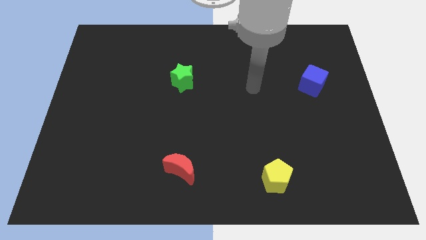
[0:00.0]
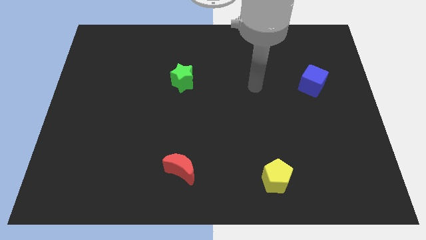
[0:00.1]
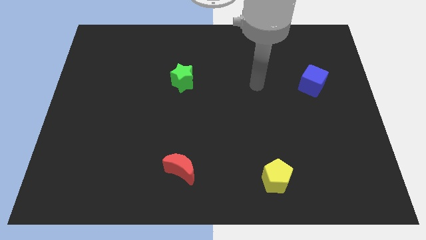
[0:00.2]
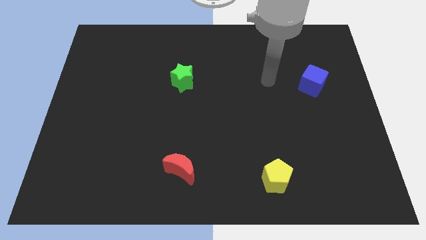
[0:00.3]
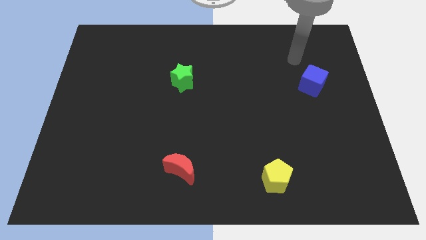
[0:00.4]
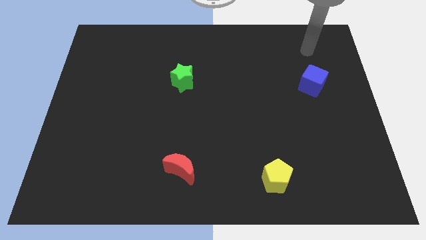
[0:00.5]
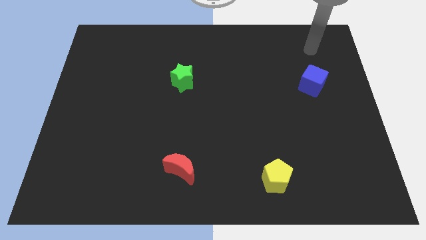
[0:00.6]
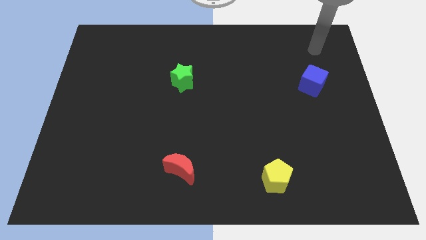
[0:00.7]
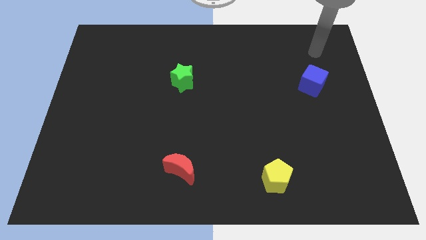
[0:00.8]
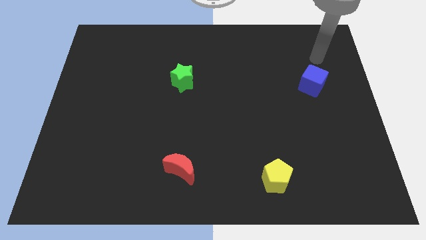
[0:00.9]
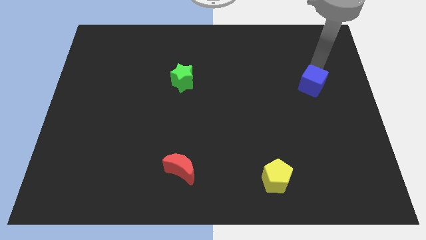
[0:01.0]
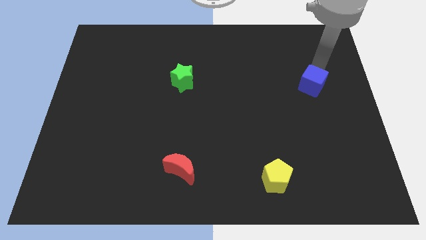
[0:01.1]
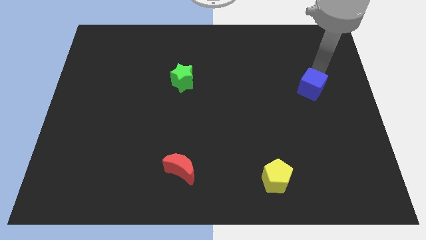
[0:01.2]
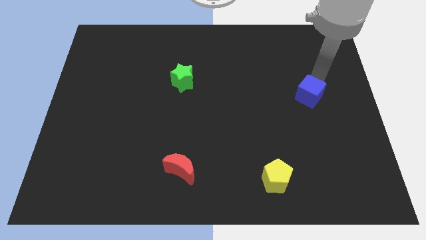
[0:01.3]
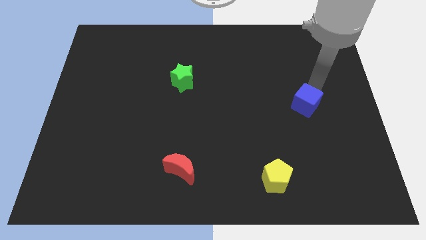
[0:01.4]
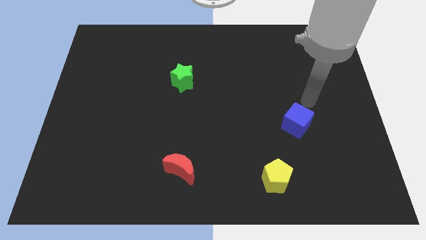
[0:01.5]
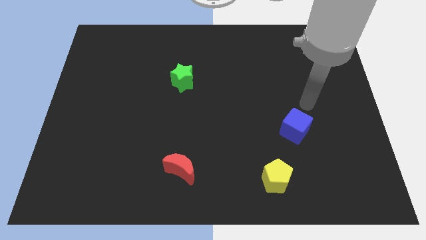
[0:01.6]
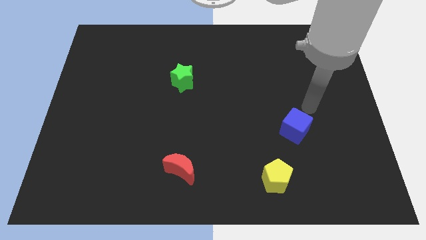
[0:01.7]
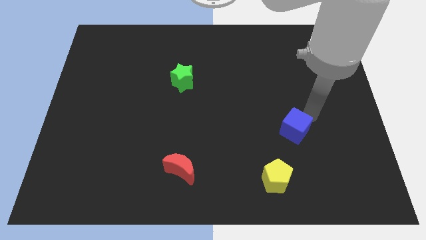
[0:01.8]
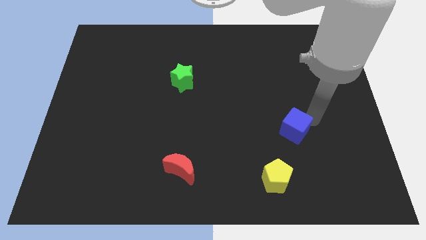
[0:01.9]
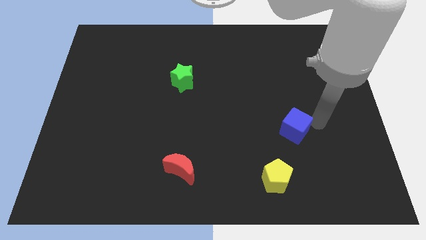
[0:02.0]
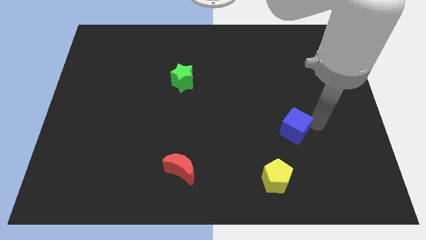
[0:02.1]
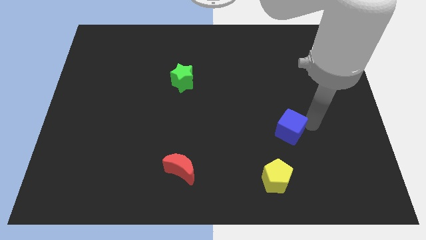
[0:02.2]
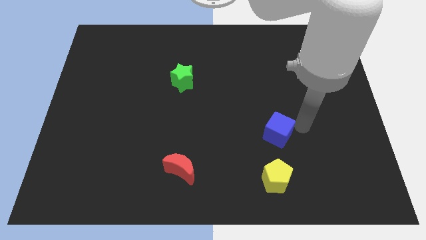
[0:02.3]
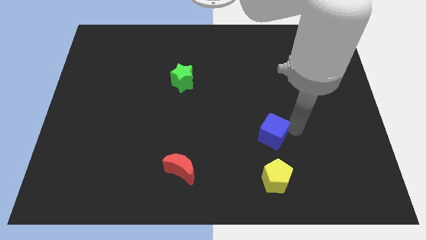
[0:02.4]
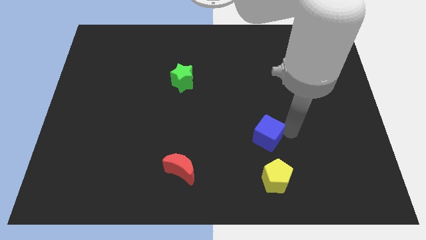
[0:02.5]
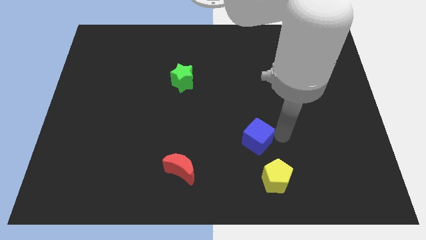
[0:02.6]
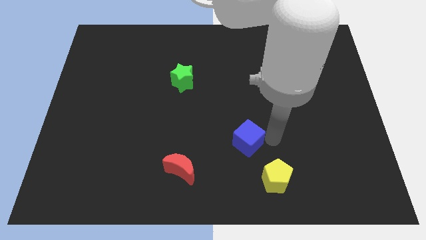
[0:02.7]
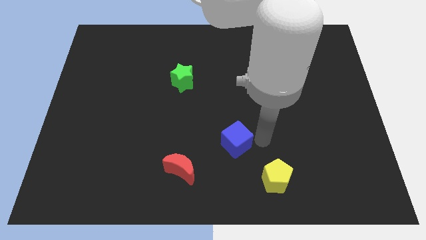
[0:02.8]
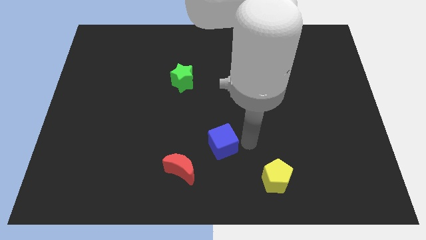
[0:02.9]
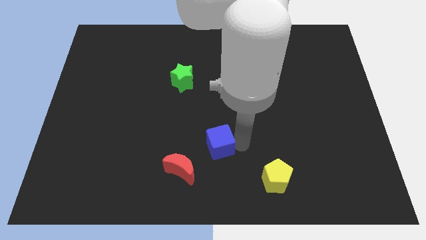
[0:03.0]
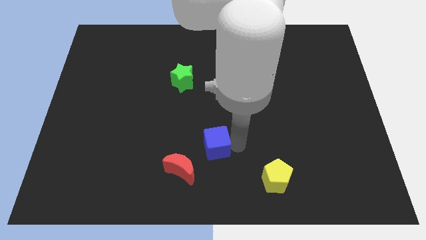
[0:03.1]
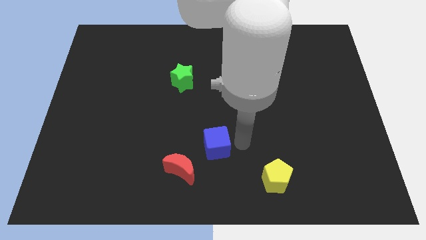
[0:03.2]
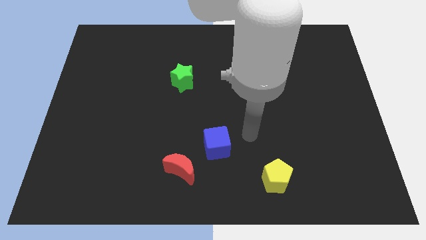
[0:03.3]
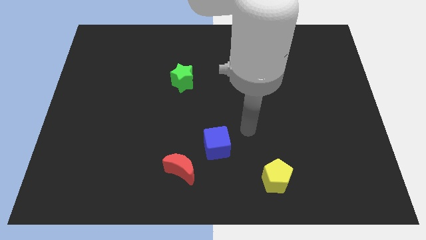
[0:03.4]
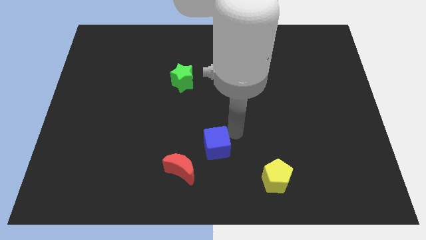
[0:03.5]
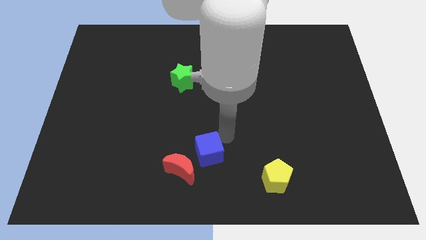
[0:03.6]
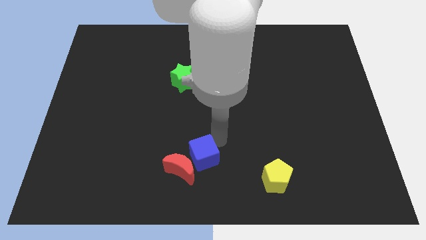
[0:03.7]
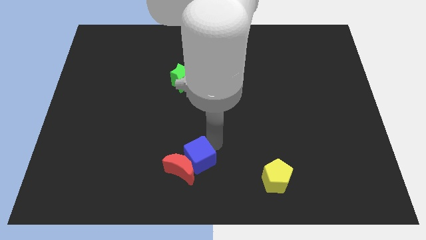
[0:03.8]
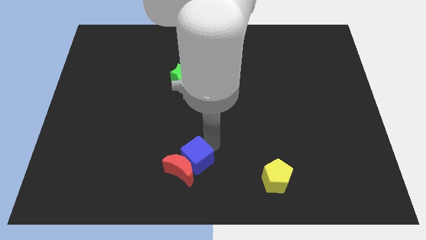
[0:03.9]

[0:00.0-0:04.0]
slide the cube to the moon

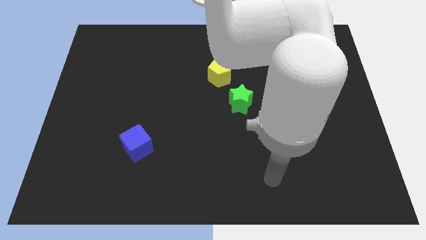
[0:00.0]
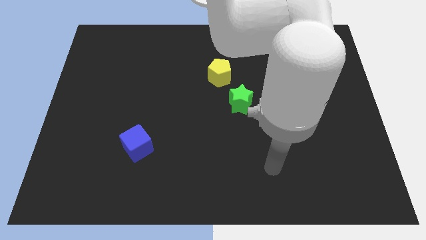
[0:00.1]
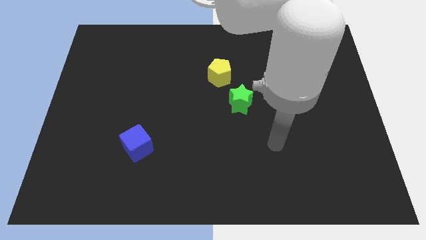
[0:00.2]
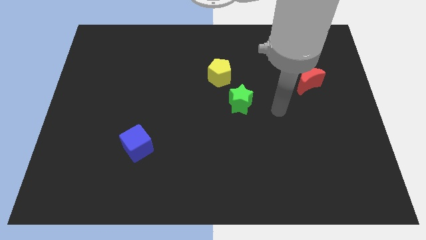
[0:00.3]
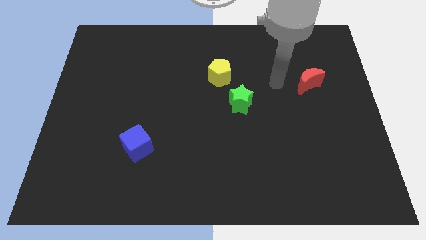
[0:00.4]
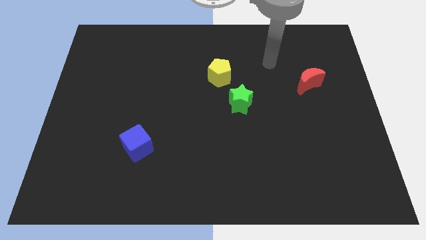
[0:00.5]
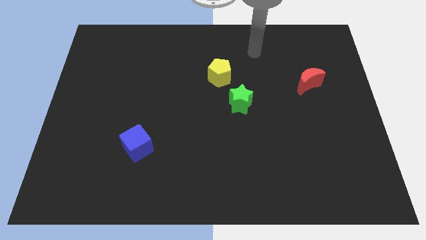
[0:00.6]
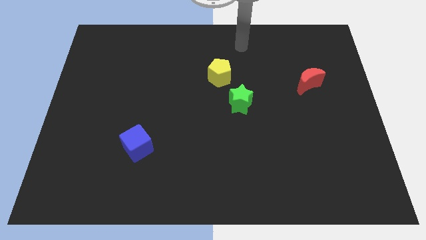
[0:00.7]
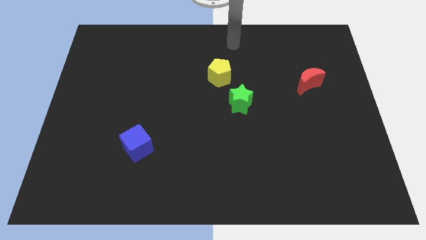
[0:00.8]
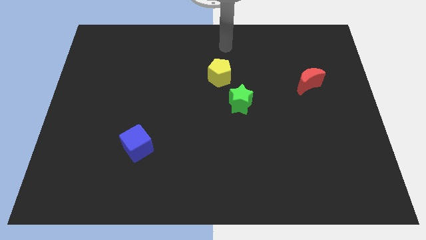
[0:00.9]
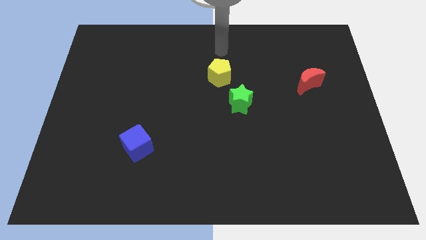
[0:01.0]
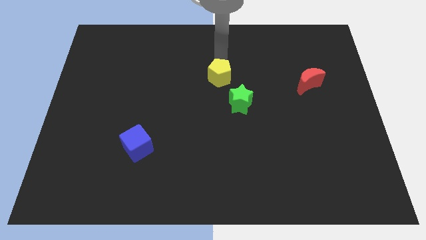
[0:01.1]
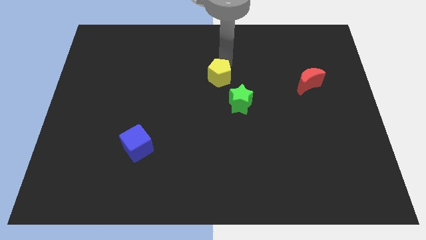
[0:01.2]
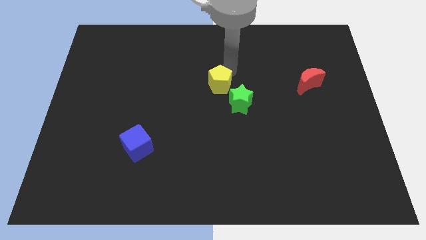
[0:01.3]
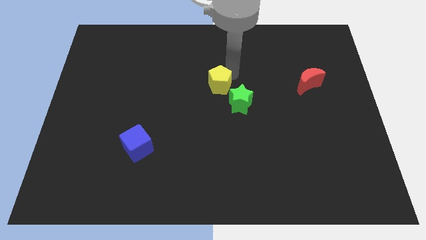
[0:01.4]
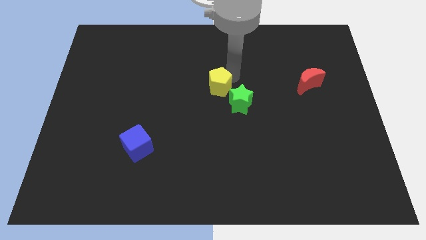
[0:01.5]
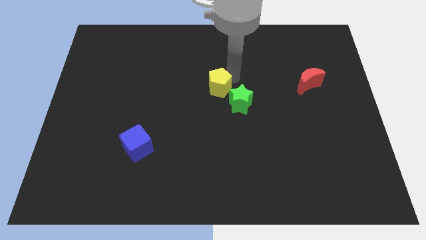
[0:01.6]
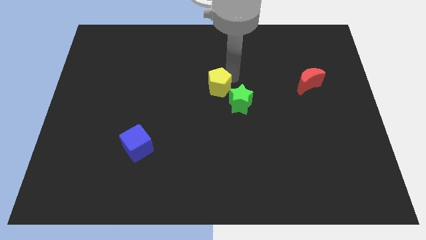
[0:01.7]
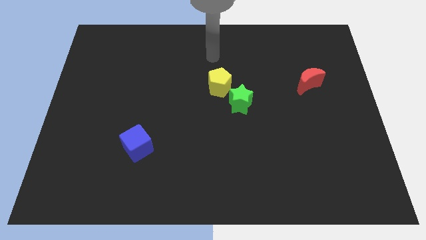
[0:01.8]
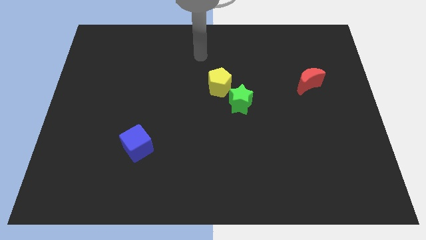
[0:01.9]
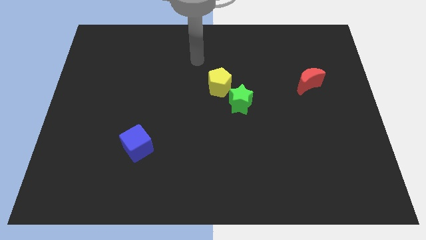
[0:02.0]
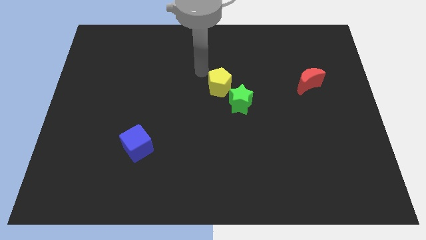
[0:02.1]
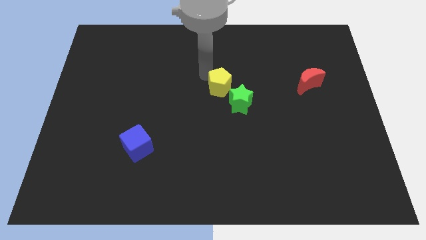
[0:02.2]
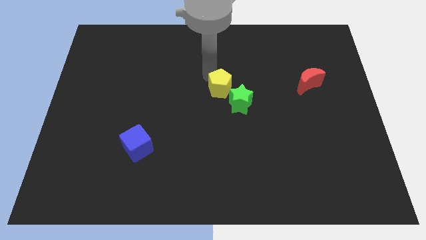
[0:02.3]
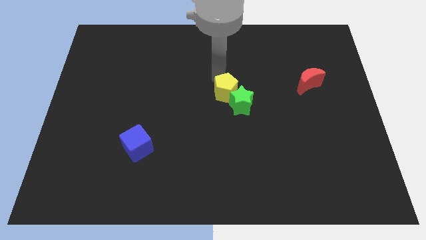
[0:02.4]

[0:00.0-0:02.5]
push the pentagon close to the green star

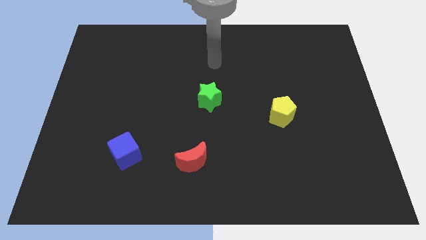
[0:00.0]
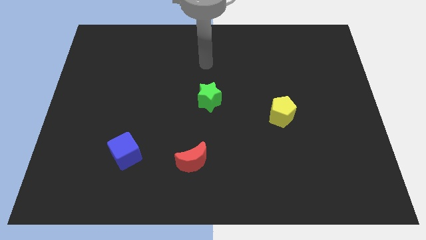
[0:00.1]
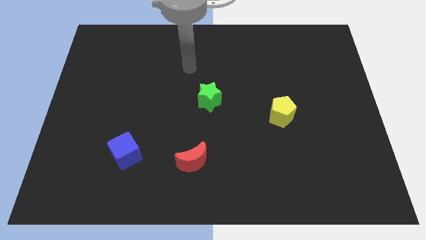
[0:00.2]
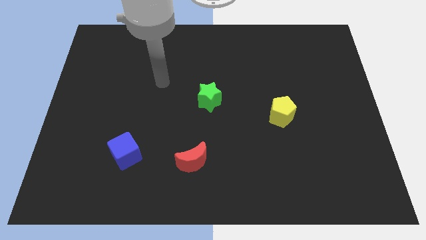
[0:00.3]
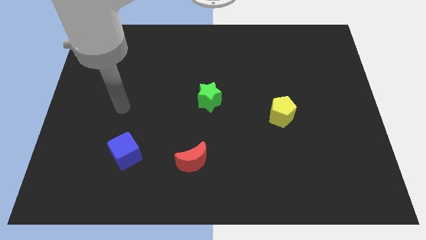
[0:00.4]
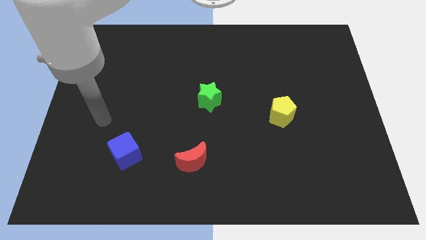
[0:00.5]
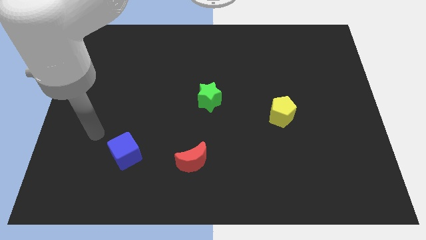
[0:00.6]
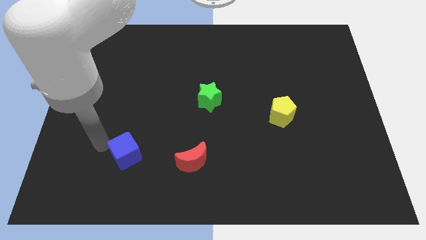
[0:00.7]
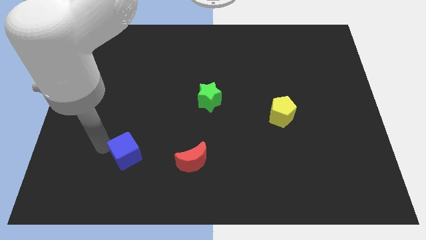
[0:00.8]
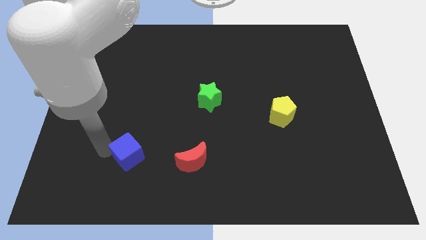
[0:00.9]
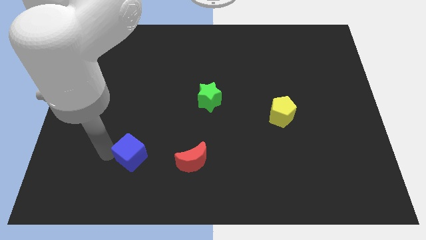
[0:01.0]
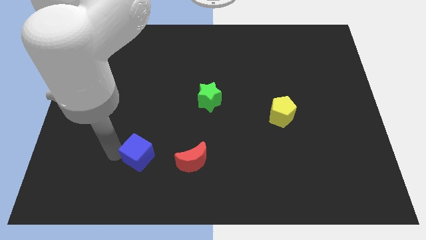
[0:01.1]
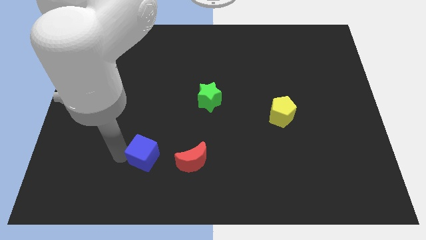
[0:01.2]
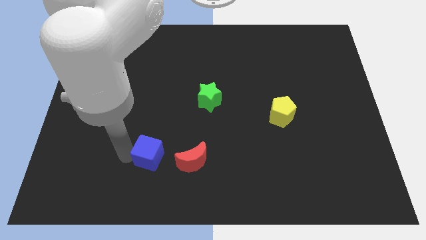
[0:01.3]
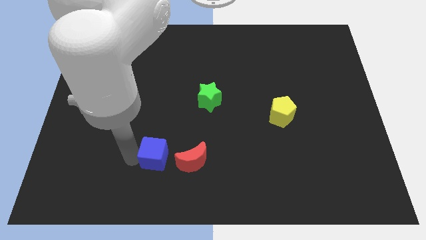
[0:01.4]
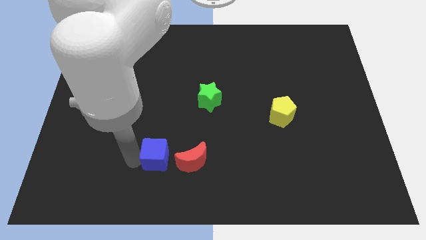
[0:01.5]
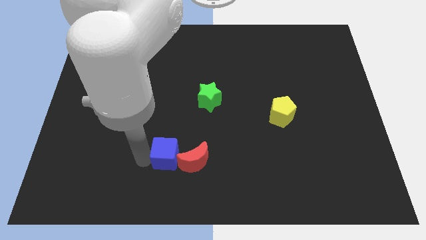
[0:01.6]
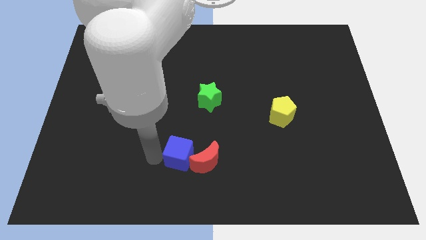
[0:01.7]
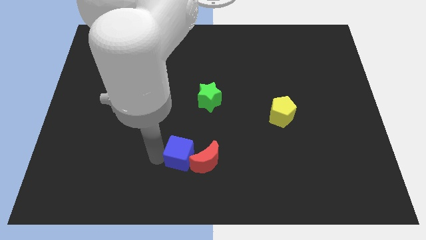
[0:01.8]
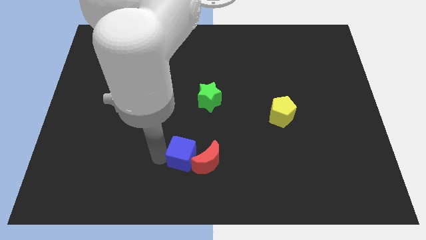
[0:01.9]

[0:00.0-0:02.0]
push the cube towards the red block

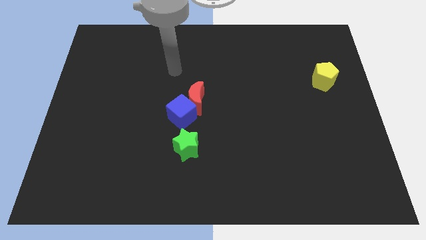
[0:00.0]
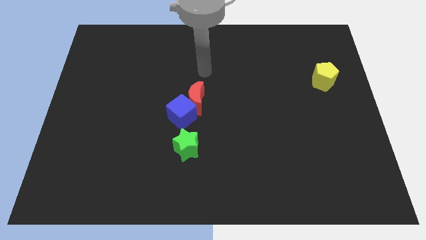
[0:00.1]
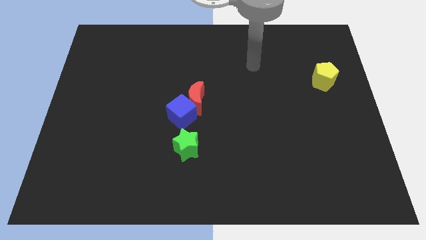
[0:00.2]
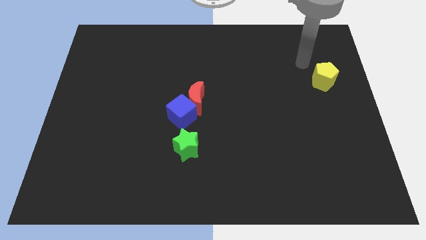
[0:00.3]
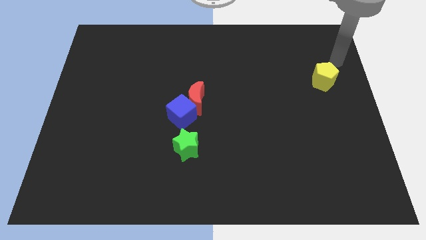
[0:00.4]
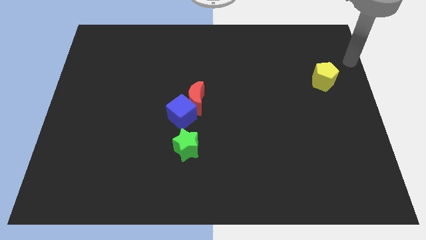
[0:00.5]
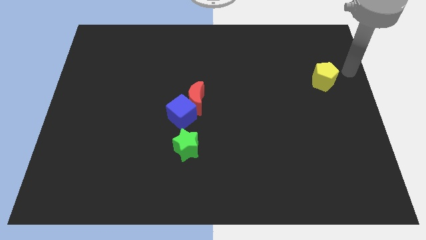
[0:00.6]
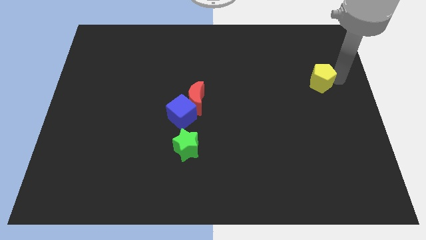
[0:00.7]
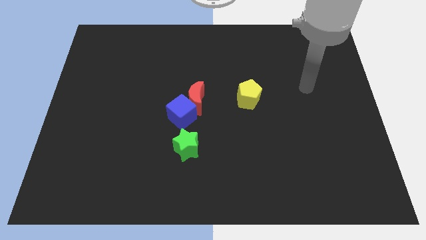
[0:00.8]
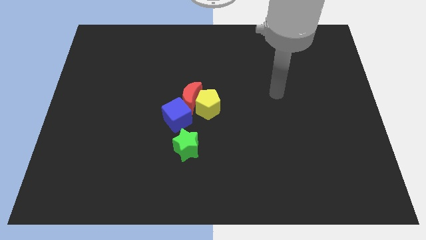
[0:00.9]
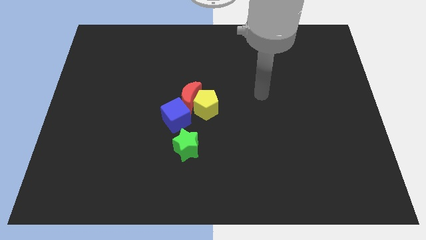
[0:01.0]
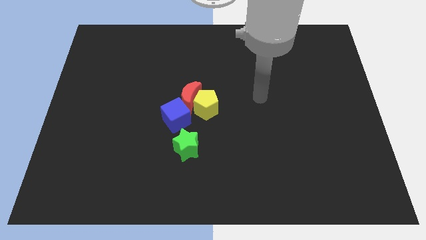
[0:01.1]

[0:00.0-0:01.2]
slide the yellow block close to the red block
